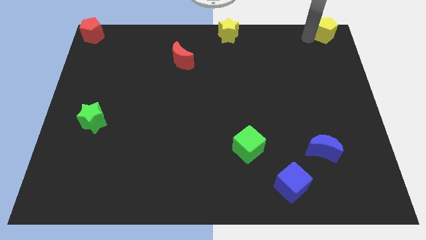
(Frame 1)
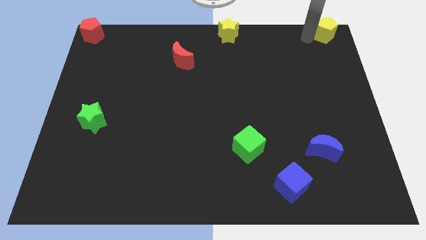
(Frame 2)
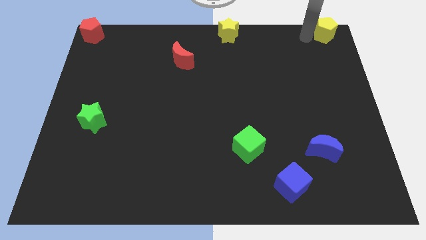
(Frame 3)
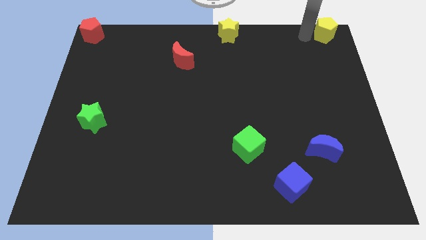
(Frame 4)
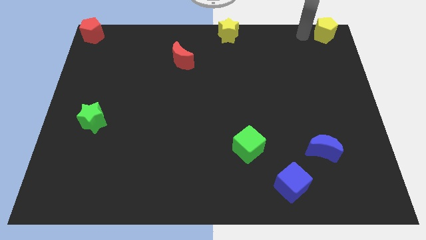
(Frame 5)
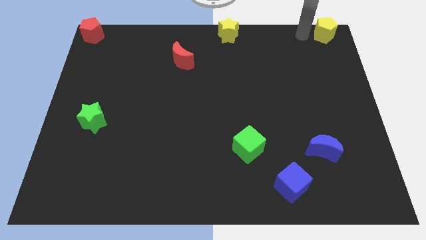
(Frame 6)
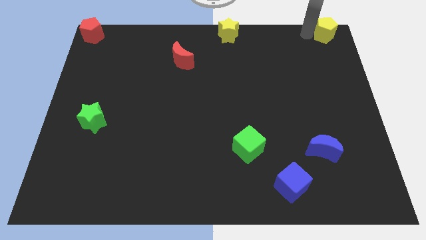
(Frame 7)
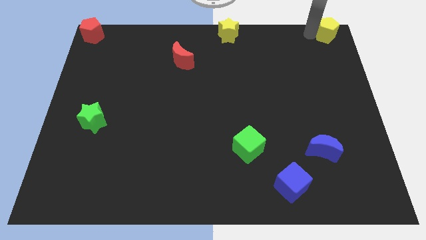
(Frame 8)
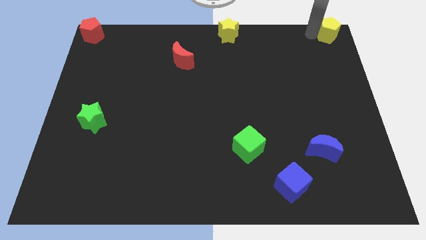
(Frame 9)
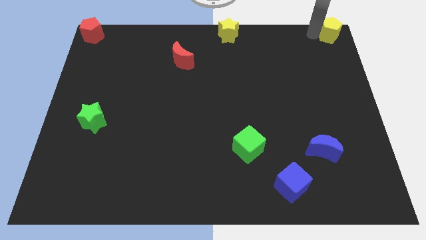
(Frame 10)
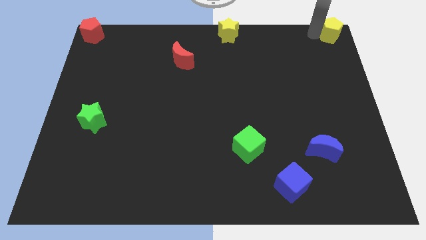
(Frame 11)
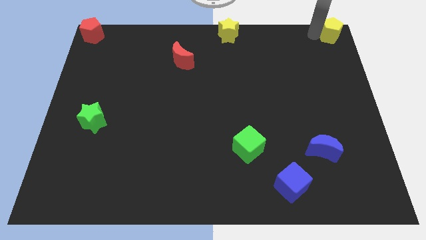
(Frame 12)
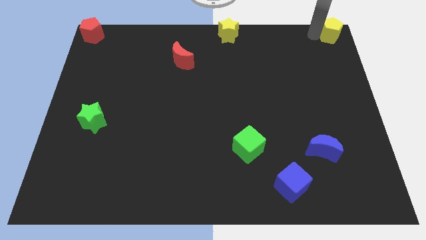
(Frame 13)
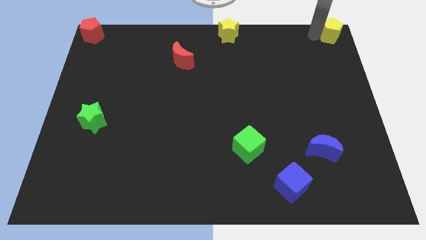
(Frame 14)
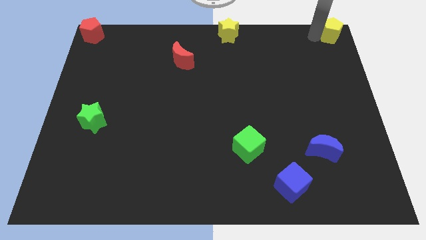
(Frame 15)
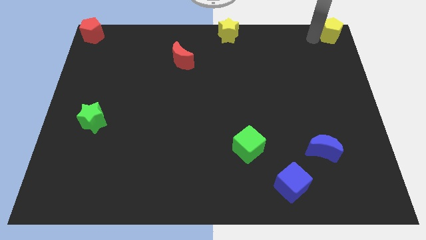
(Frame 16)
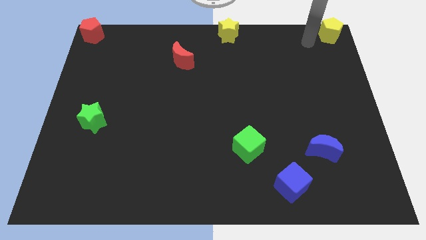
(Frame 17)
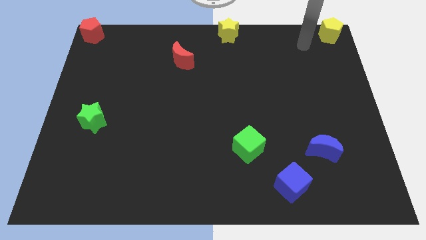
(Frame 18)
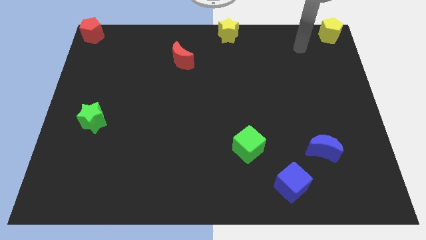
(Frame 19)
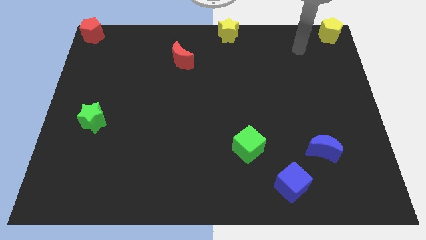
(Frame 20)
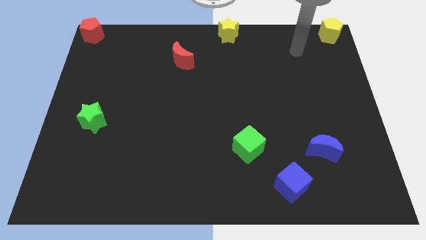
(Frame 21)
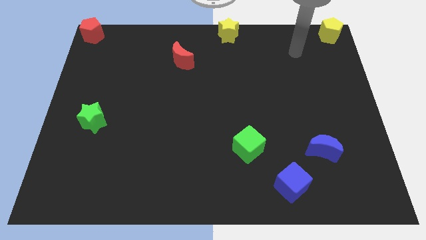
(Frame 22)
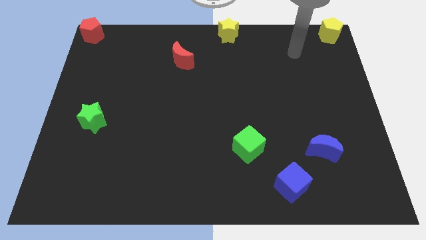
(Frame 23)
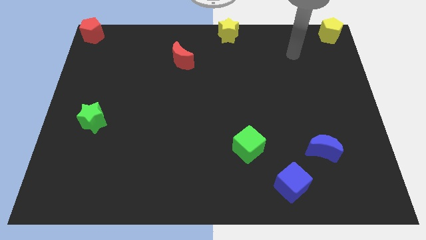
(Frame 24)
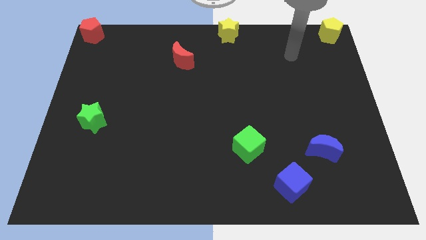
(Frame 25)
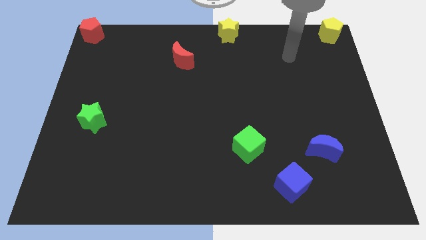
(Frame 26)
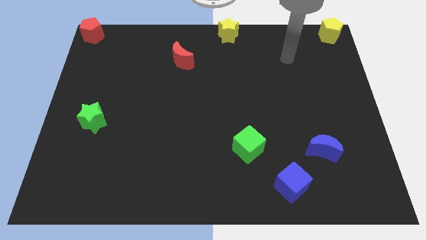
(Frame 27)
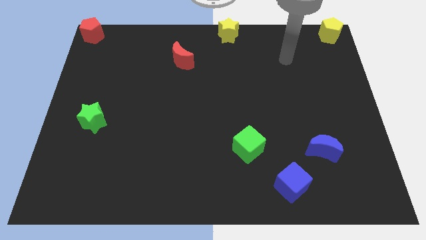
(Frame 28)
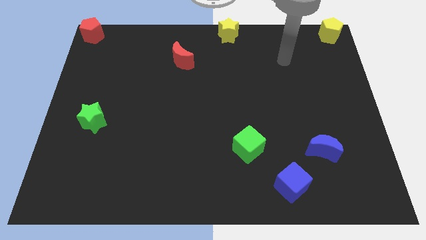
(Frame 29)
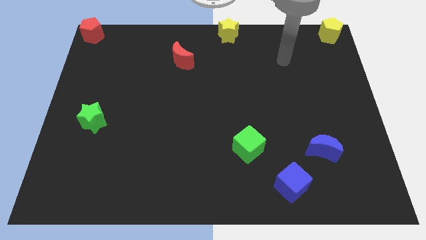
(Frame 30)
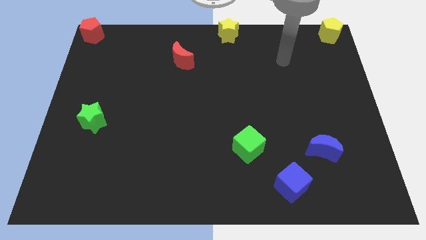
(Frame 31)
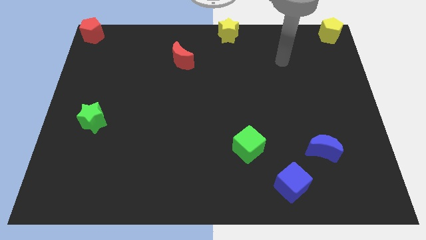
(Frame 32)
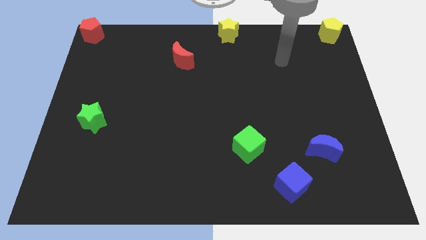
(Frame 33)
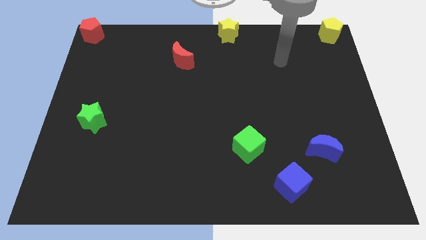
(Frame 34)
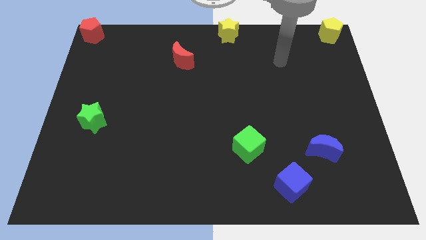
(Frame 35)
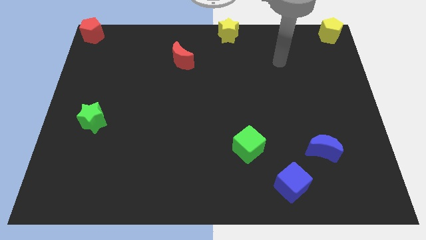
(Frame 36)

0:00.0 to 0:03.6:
move your arm away from the yellow pentagon

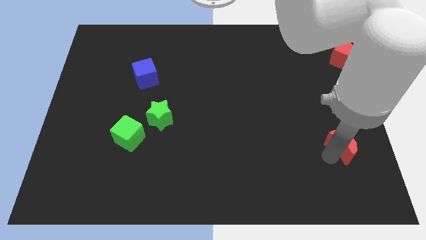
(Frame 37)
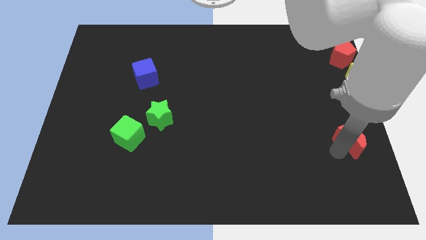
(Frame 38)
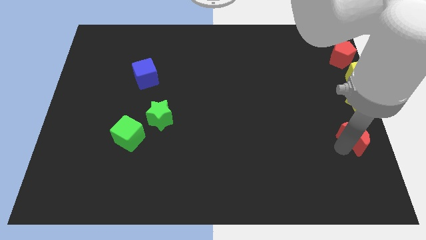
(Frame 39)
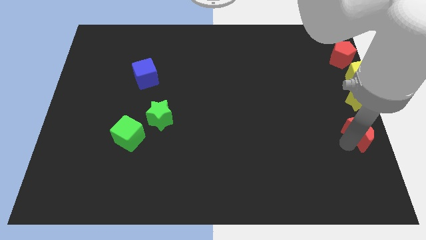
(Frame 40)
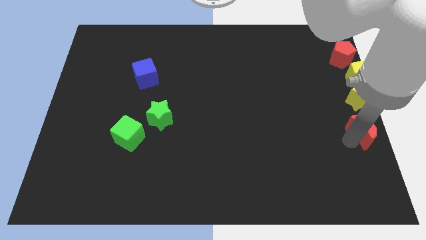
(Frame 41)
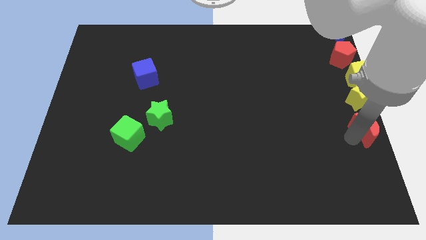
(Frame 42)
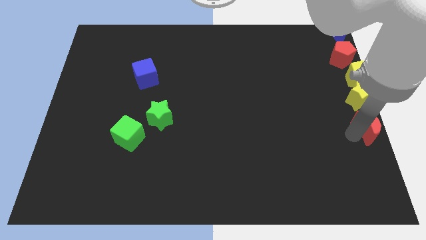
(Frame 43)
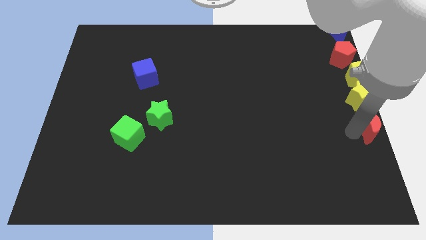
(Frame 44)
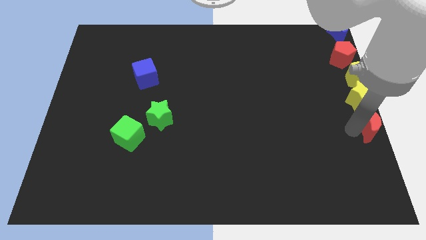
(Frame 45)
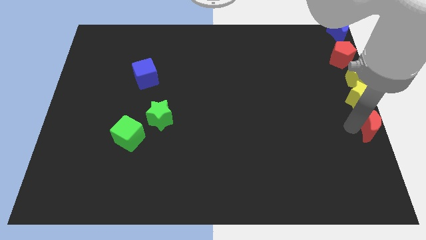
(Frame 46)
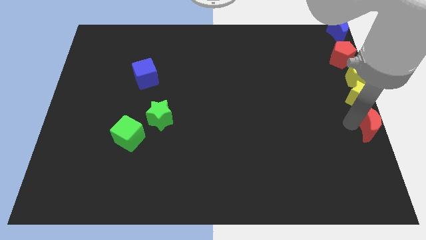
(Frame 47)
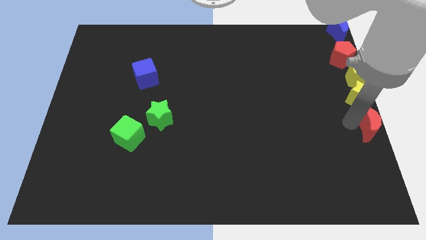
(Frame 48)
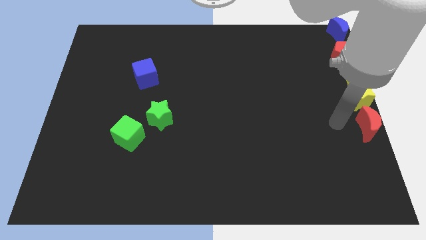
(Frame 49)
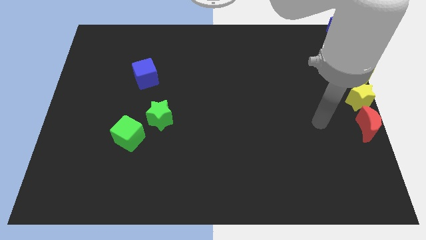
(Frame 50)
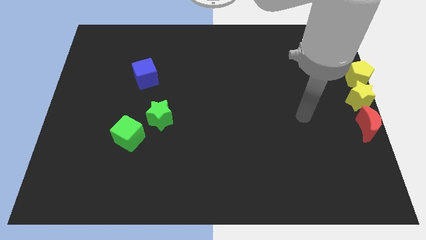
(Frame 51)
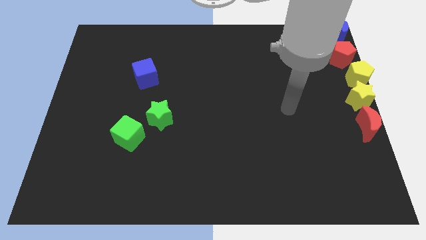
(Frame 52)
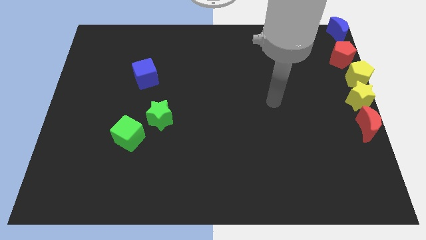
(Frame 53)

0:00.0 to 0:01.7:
place the red crescent below the yellow star

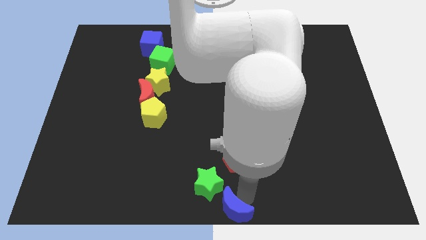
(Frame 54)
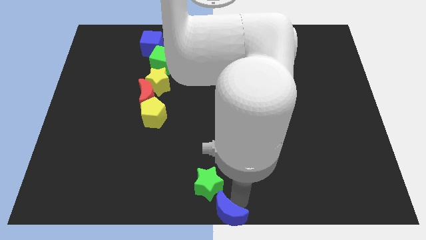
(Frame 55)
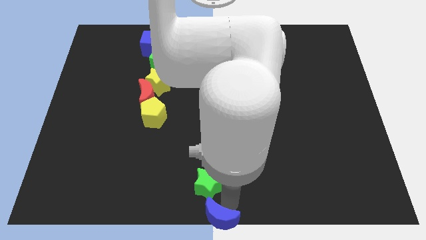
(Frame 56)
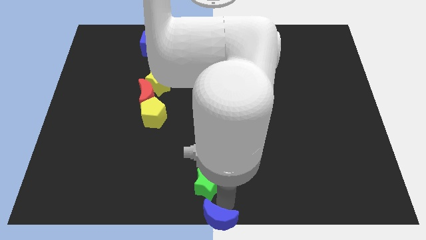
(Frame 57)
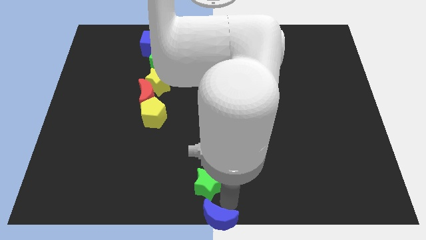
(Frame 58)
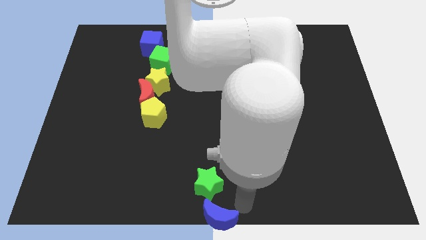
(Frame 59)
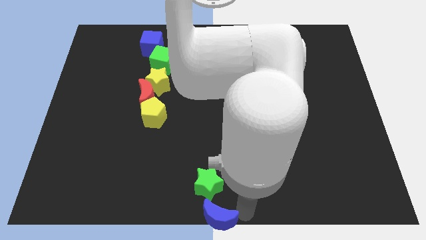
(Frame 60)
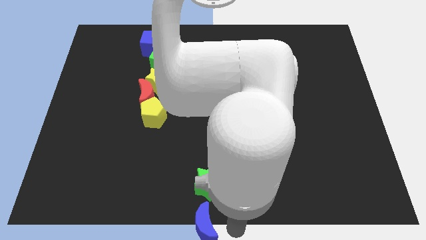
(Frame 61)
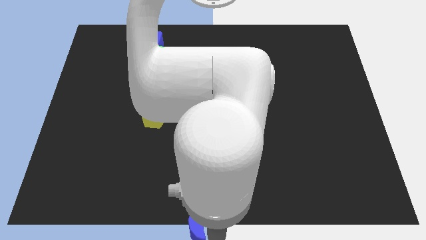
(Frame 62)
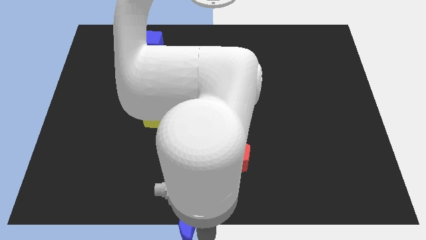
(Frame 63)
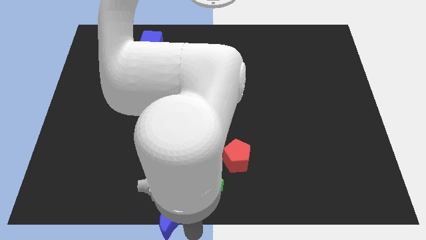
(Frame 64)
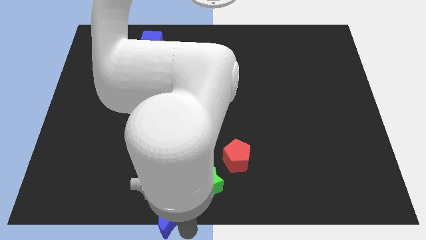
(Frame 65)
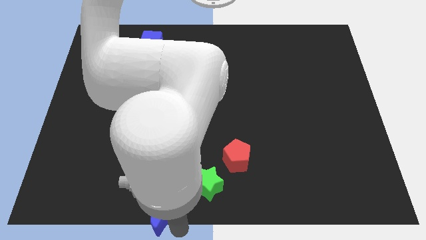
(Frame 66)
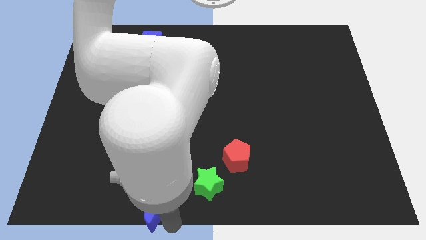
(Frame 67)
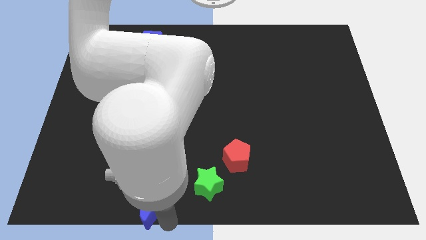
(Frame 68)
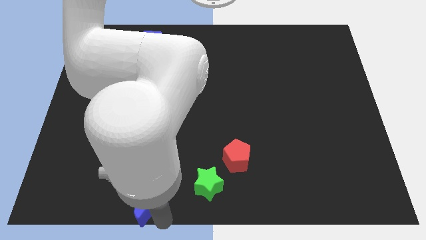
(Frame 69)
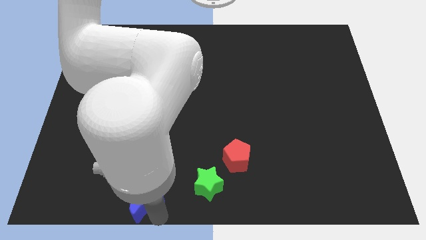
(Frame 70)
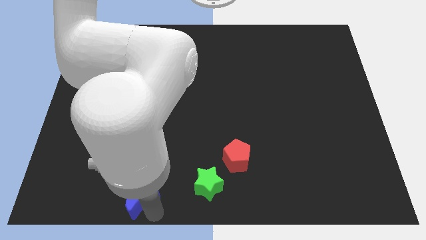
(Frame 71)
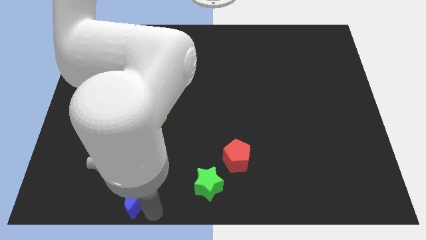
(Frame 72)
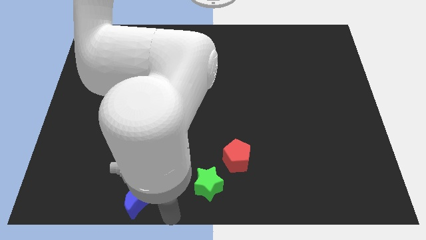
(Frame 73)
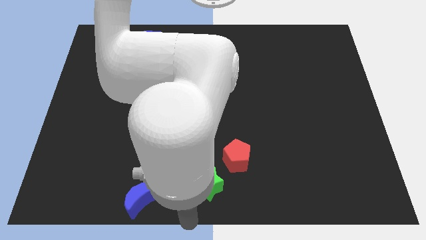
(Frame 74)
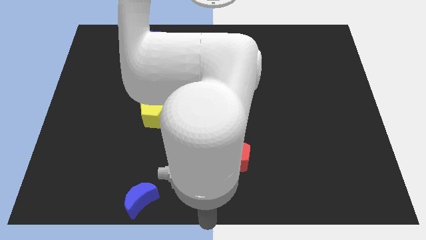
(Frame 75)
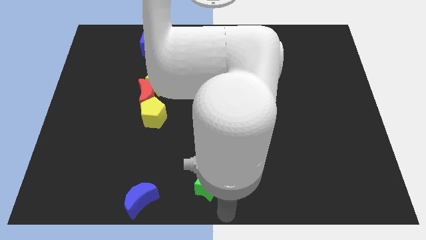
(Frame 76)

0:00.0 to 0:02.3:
push the blue crescent to the bottom of the yellow pentagon

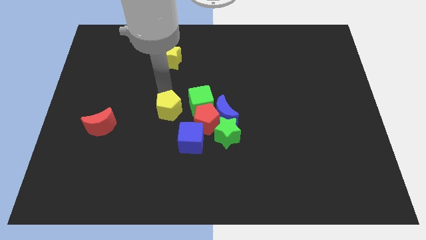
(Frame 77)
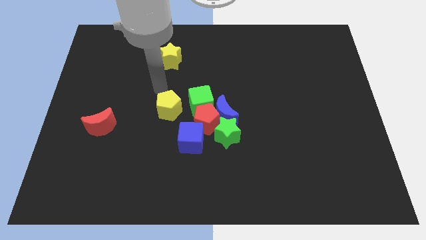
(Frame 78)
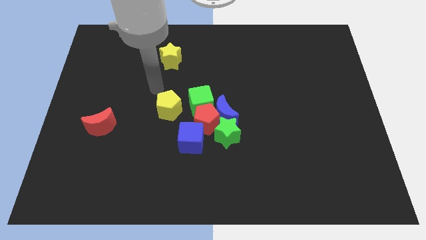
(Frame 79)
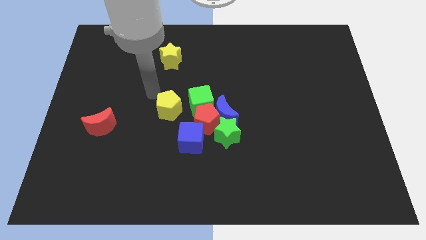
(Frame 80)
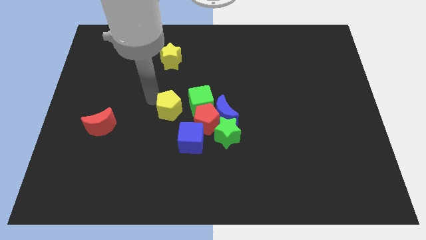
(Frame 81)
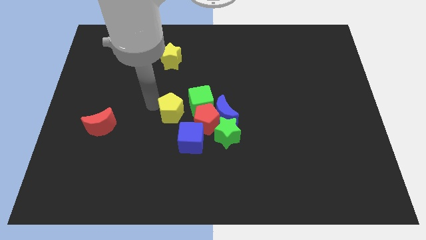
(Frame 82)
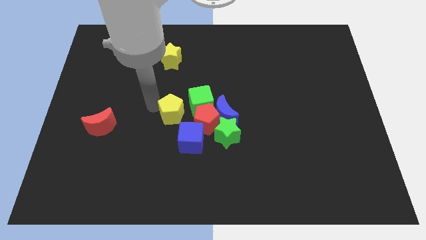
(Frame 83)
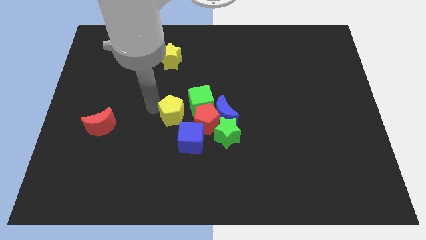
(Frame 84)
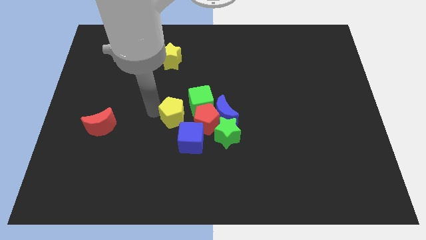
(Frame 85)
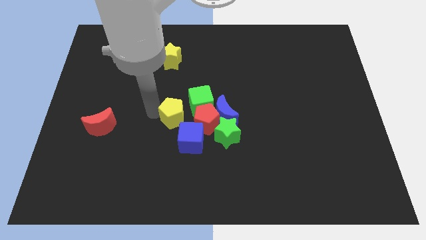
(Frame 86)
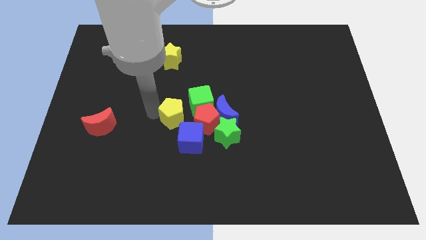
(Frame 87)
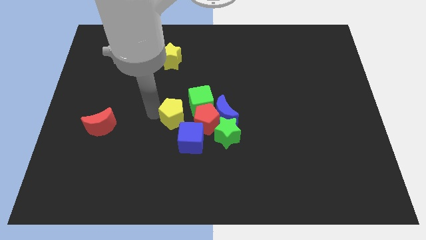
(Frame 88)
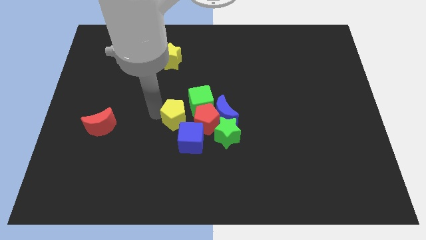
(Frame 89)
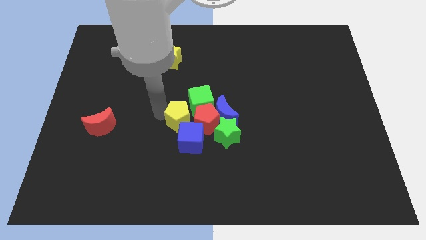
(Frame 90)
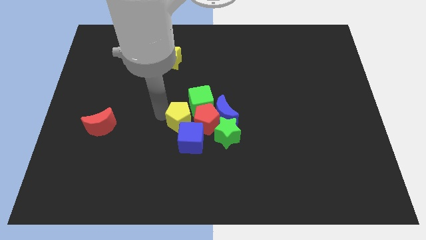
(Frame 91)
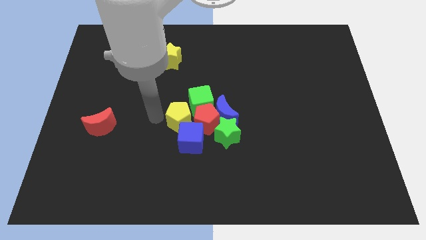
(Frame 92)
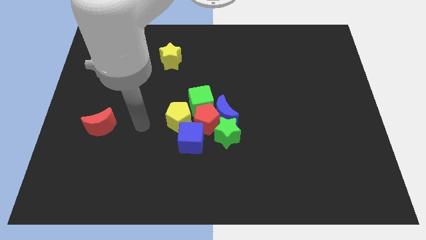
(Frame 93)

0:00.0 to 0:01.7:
push the yellow pentagon into the group of blocks
